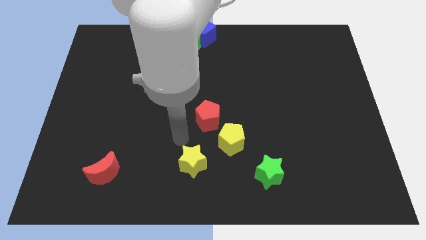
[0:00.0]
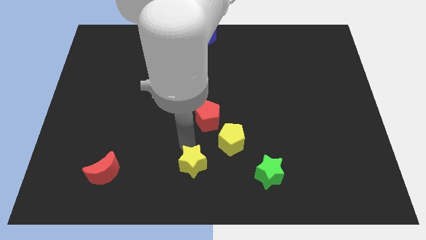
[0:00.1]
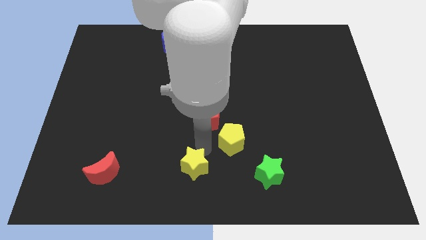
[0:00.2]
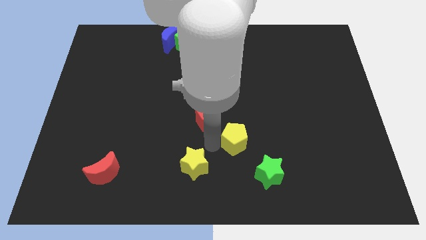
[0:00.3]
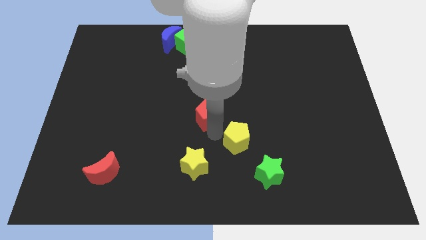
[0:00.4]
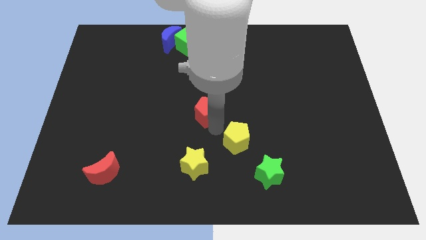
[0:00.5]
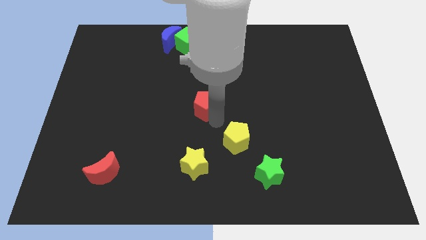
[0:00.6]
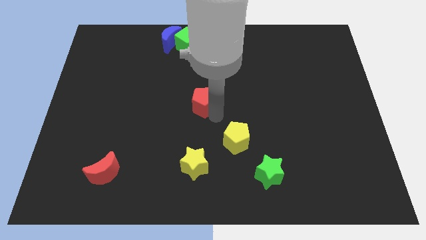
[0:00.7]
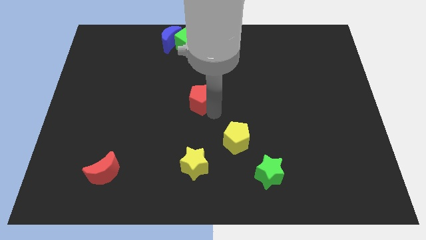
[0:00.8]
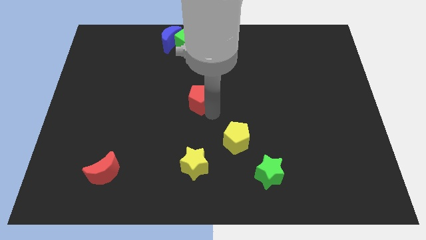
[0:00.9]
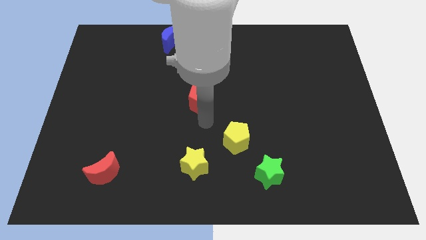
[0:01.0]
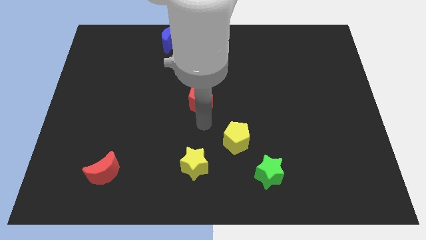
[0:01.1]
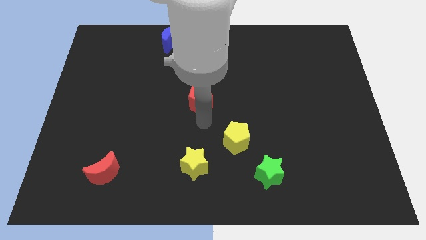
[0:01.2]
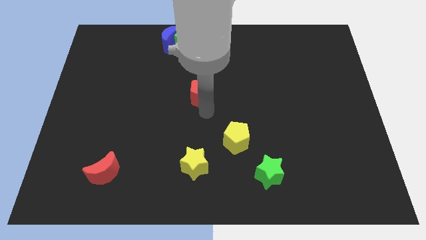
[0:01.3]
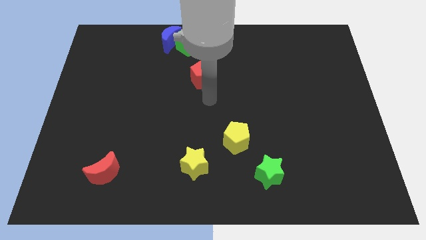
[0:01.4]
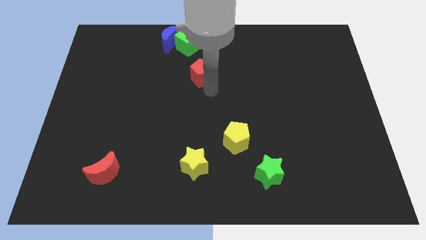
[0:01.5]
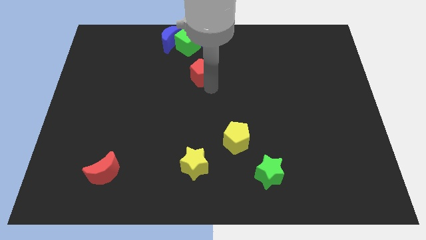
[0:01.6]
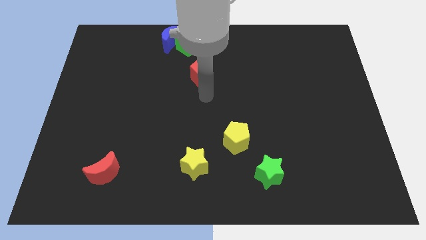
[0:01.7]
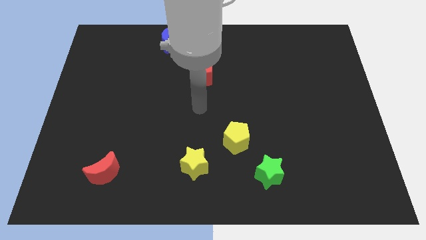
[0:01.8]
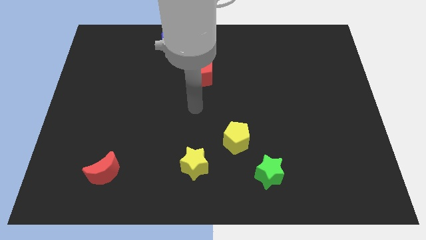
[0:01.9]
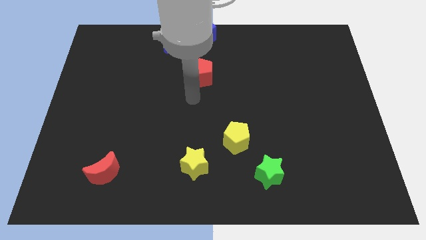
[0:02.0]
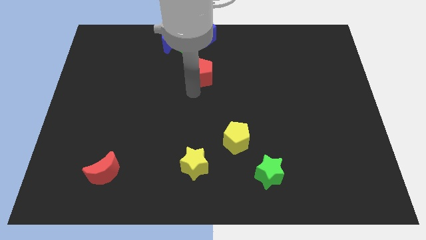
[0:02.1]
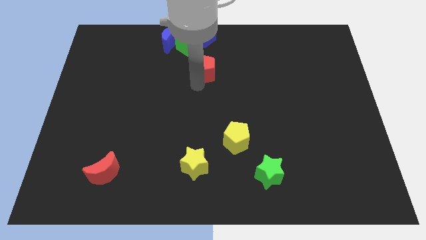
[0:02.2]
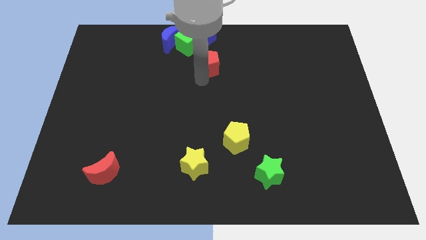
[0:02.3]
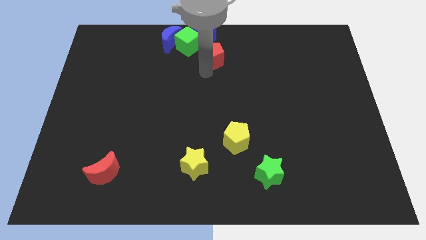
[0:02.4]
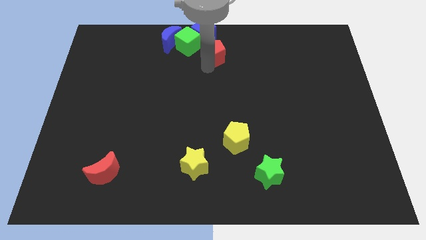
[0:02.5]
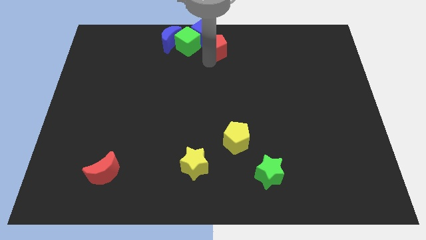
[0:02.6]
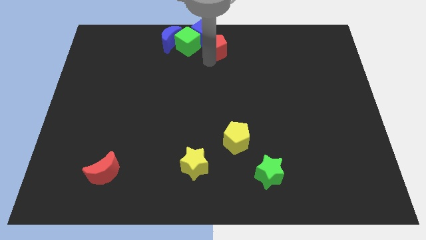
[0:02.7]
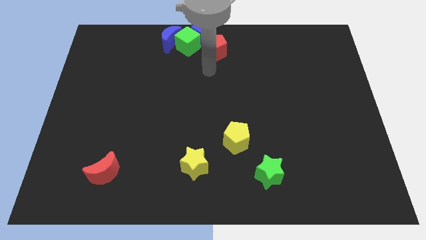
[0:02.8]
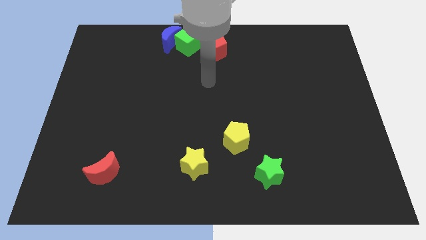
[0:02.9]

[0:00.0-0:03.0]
add the red pentagon to the group of blocks at the top center of the board

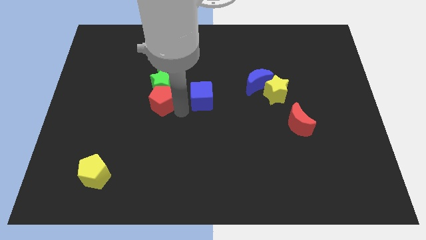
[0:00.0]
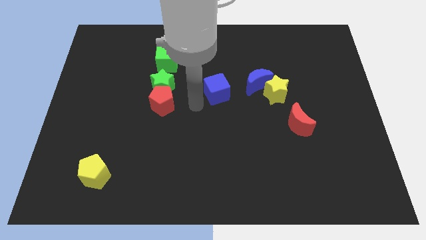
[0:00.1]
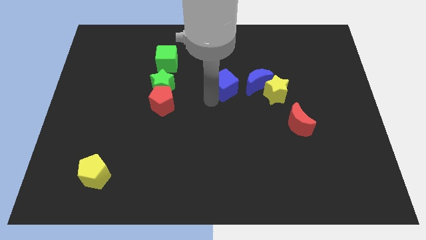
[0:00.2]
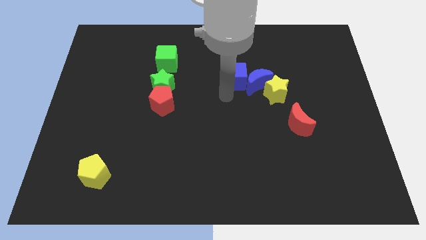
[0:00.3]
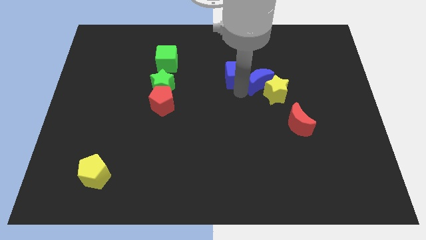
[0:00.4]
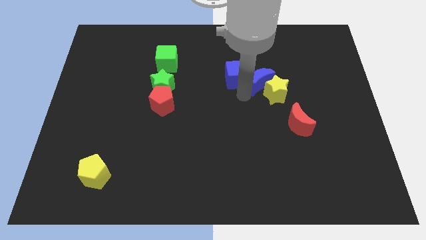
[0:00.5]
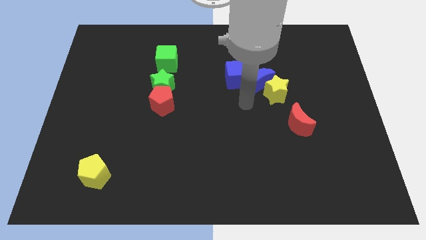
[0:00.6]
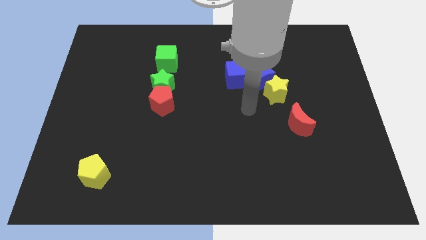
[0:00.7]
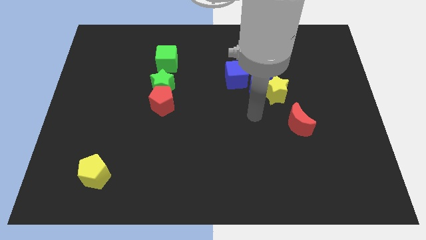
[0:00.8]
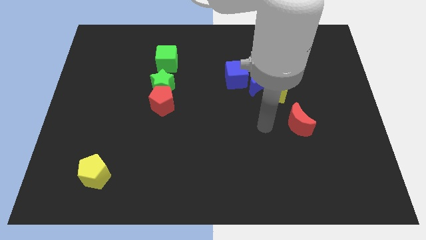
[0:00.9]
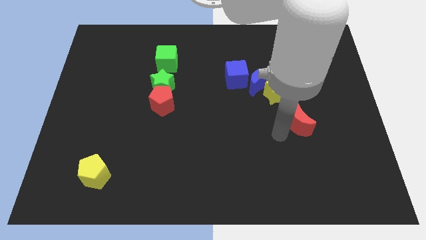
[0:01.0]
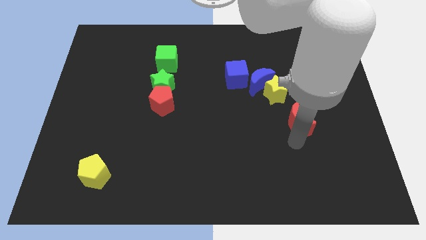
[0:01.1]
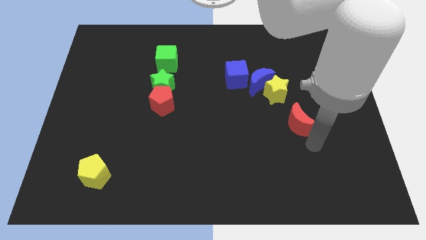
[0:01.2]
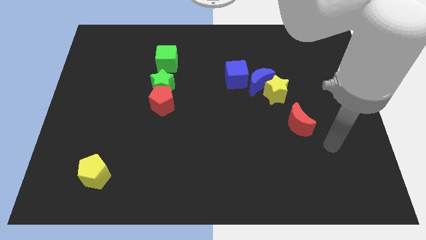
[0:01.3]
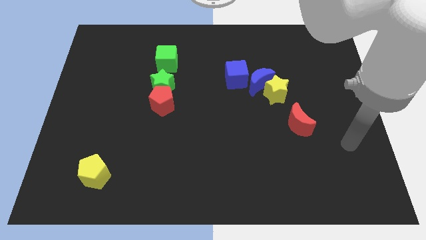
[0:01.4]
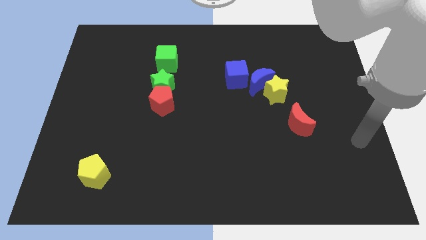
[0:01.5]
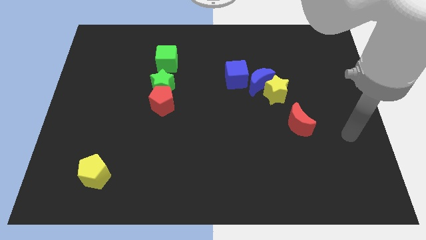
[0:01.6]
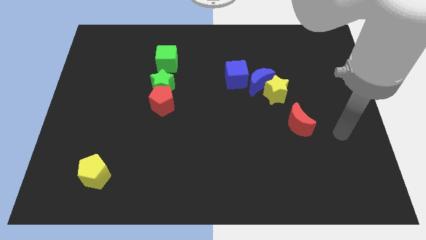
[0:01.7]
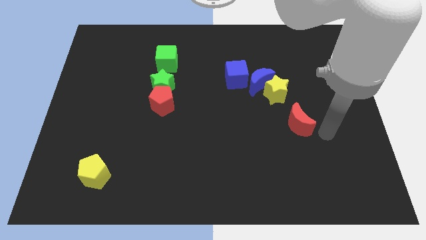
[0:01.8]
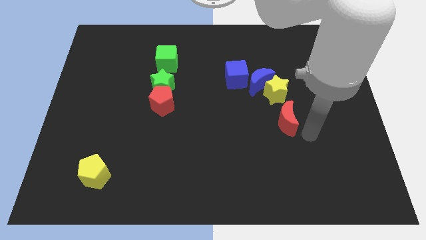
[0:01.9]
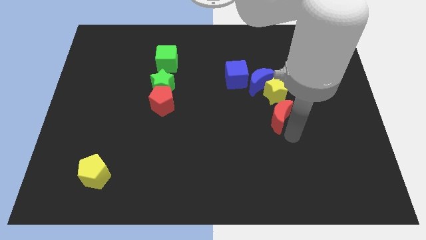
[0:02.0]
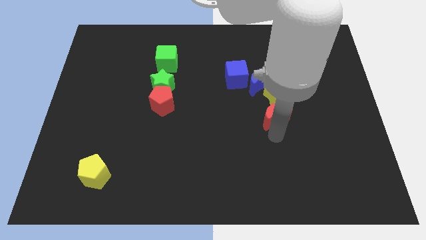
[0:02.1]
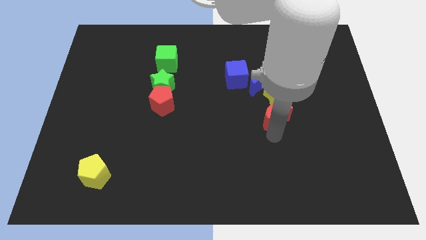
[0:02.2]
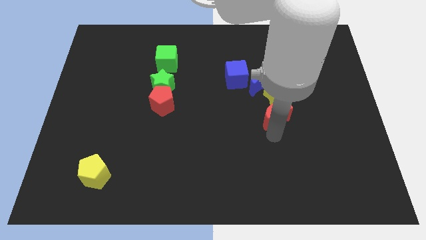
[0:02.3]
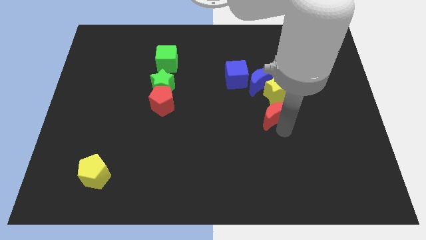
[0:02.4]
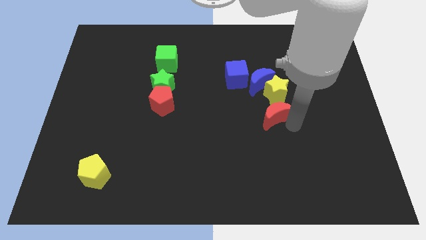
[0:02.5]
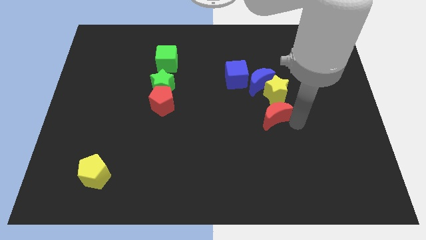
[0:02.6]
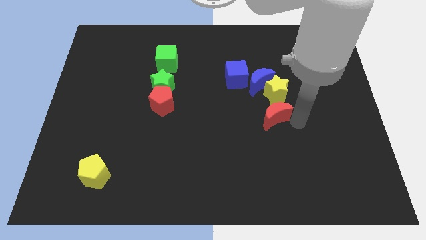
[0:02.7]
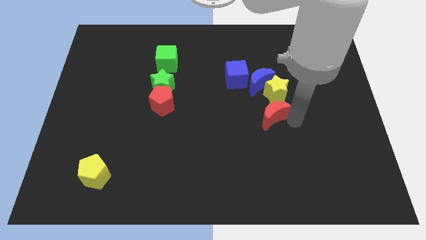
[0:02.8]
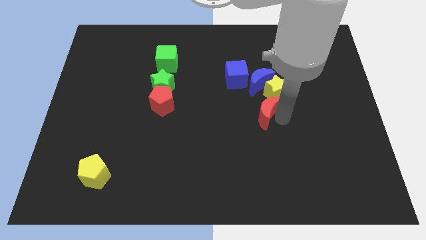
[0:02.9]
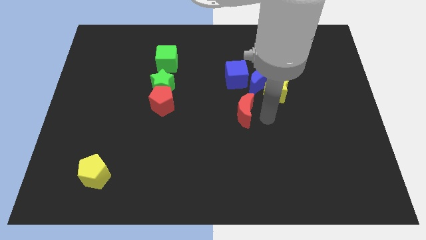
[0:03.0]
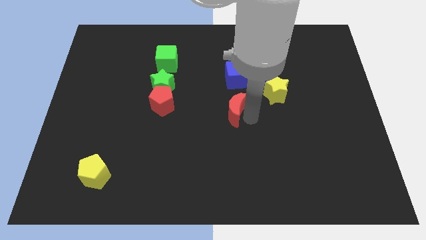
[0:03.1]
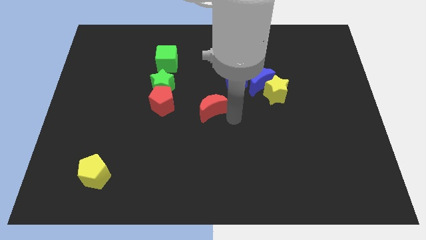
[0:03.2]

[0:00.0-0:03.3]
place the red moon vertically below the blue cube

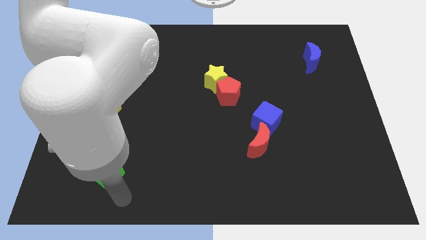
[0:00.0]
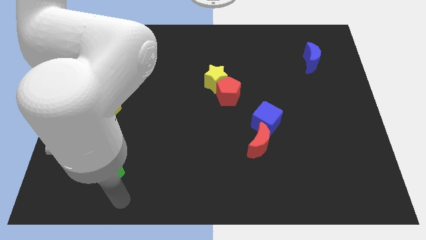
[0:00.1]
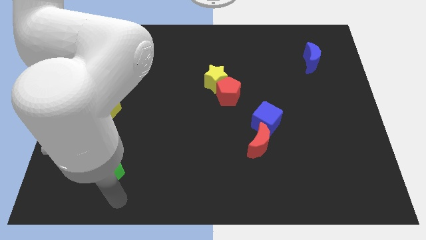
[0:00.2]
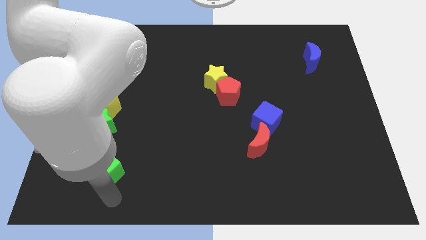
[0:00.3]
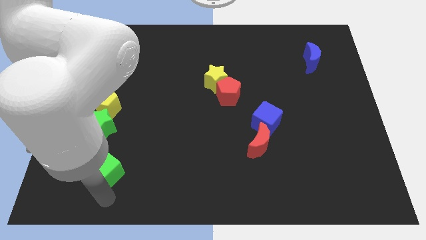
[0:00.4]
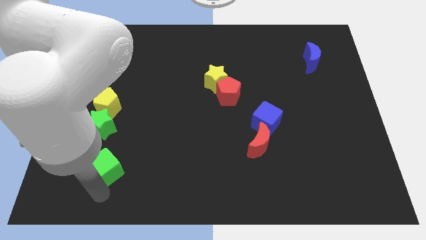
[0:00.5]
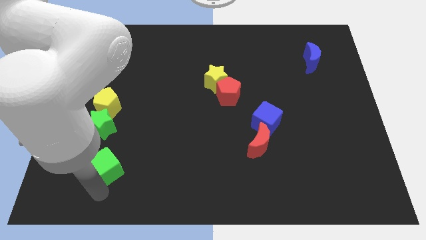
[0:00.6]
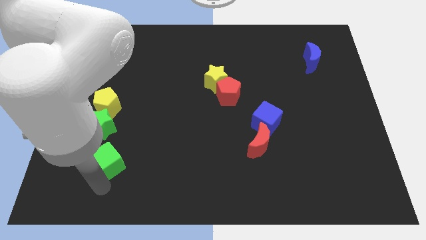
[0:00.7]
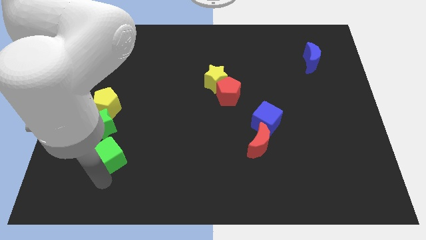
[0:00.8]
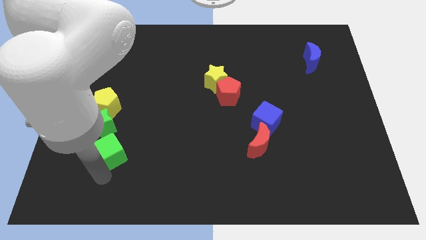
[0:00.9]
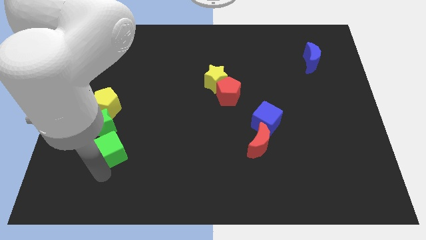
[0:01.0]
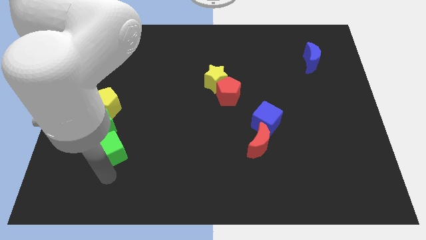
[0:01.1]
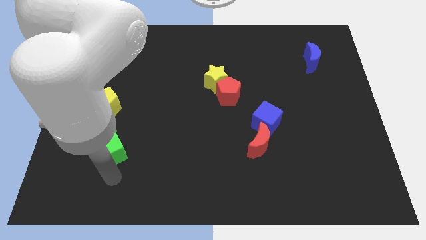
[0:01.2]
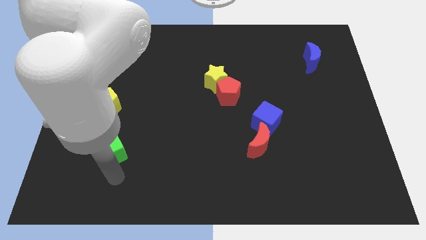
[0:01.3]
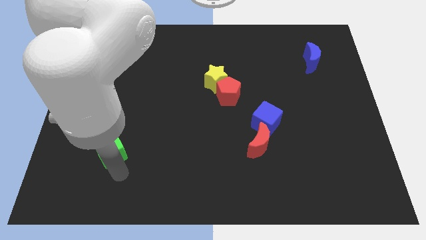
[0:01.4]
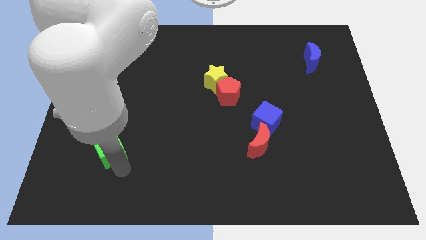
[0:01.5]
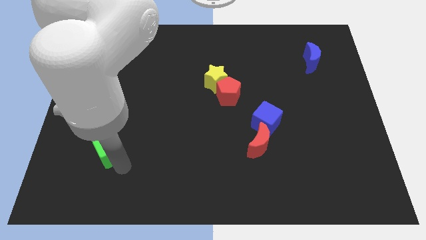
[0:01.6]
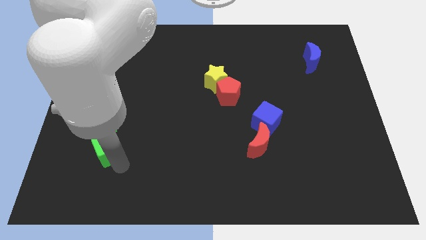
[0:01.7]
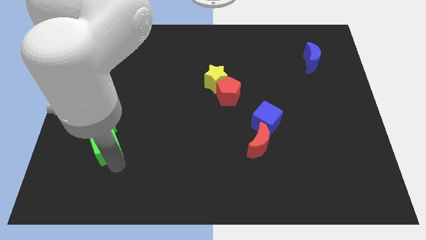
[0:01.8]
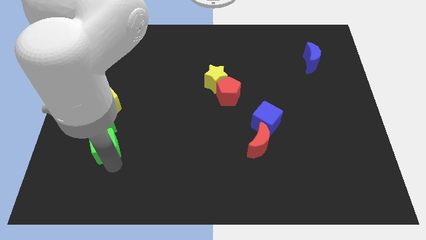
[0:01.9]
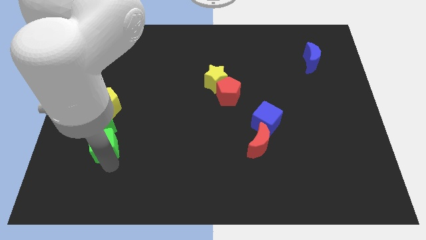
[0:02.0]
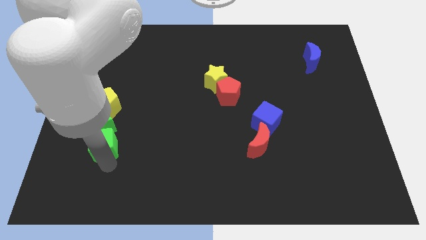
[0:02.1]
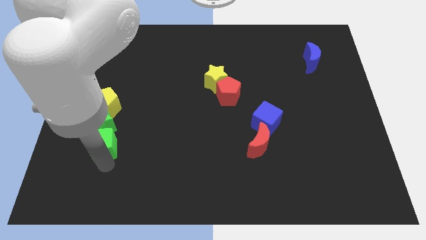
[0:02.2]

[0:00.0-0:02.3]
make the green cube to touch the green star

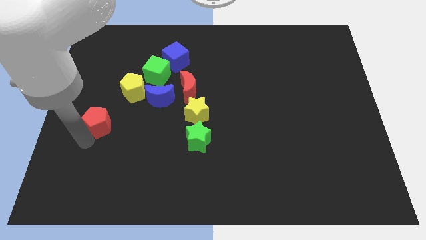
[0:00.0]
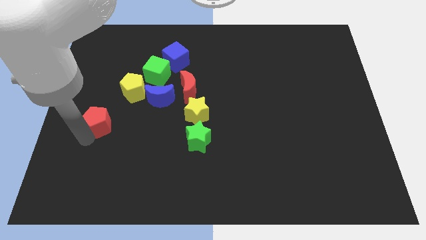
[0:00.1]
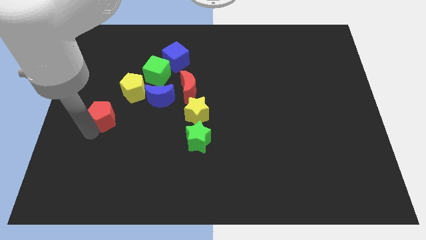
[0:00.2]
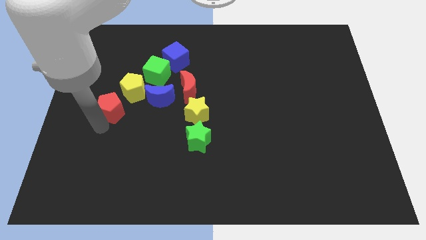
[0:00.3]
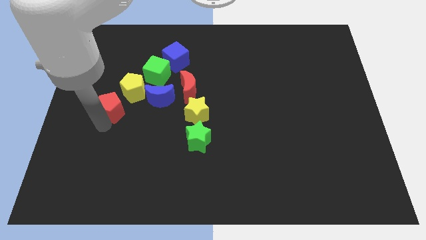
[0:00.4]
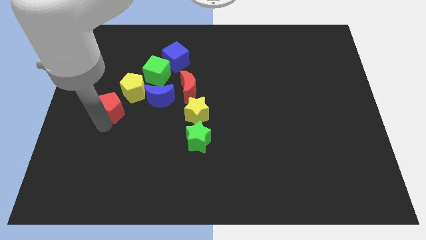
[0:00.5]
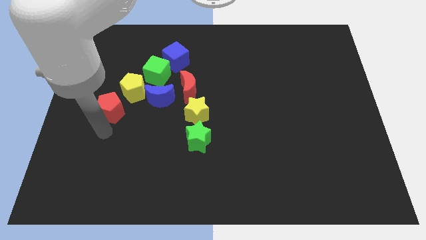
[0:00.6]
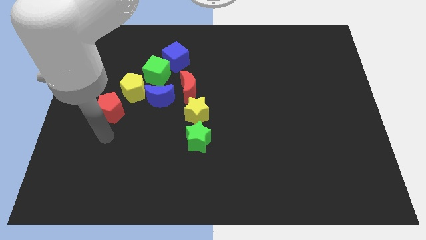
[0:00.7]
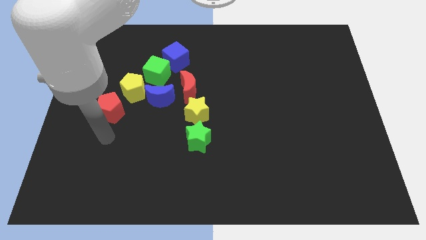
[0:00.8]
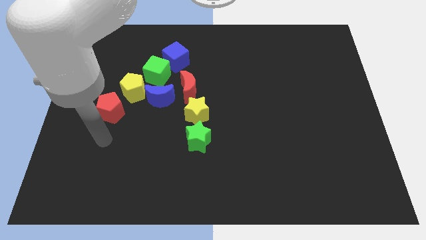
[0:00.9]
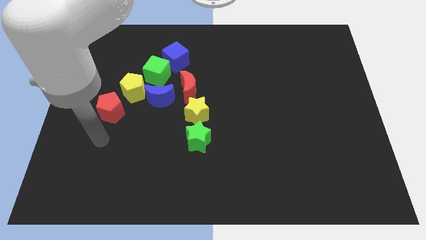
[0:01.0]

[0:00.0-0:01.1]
move the red pentagon towards the yellow pentagon
